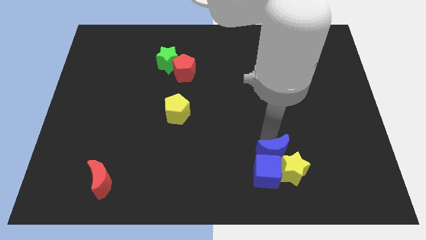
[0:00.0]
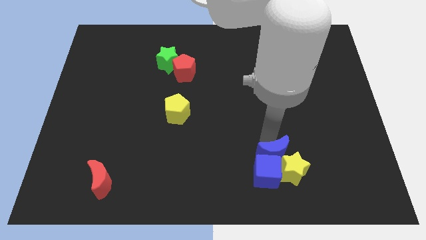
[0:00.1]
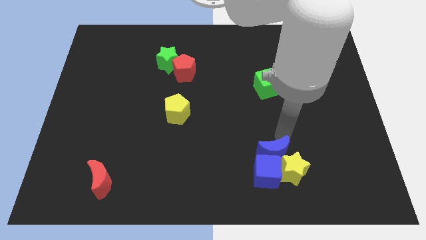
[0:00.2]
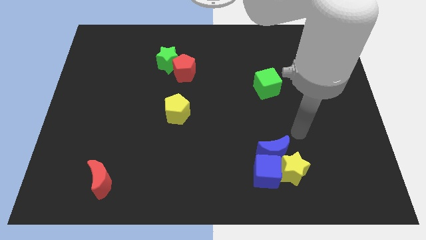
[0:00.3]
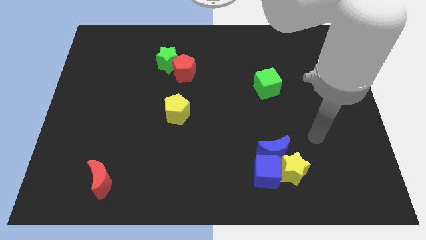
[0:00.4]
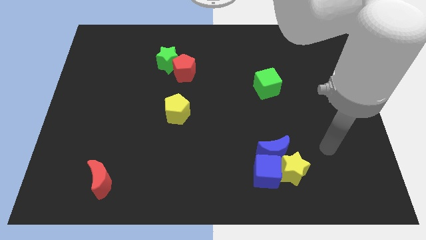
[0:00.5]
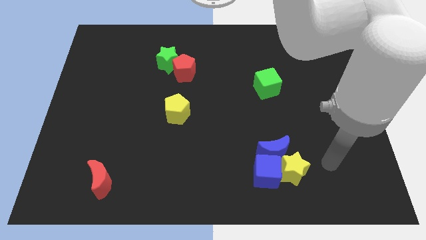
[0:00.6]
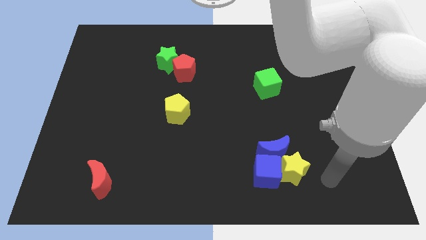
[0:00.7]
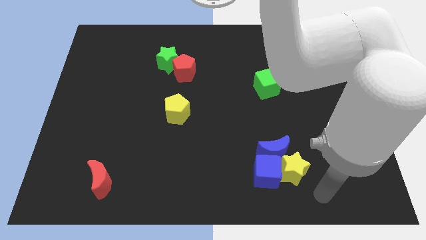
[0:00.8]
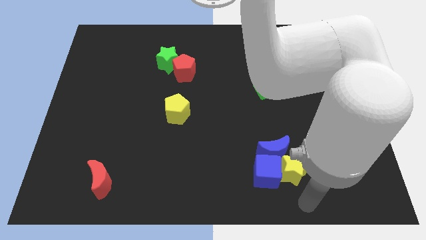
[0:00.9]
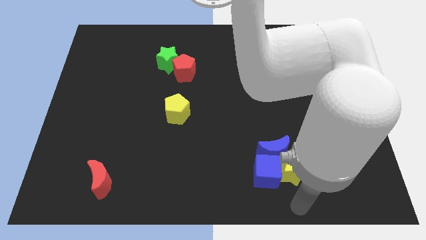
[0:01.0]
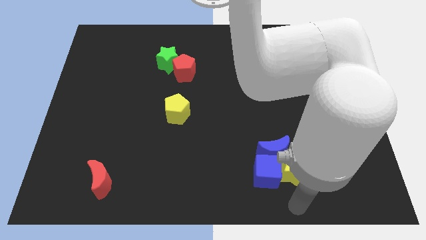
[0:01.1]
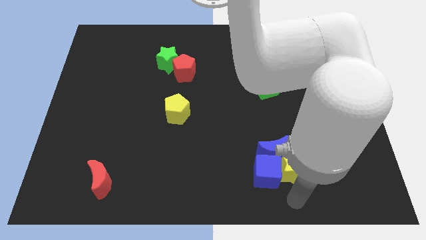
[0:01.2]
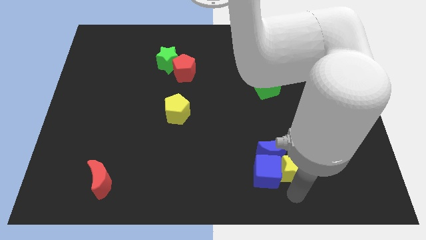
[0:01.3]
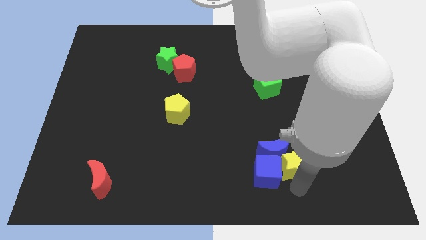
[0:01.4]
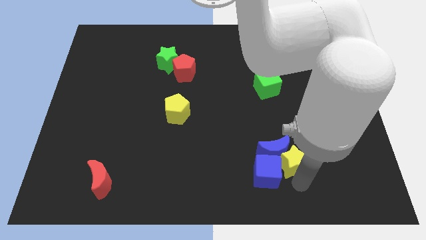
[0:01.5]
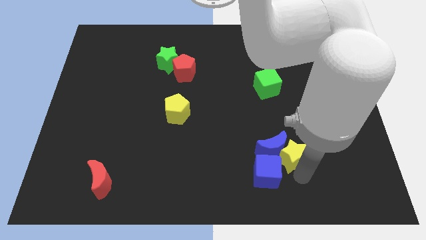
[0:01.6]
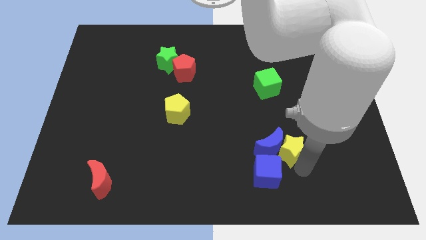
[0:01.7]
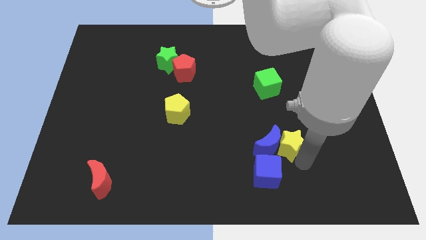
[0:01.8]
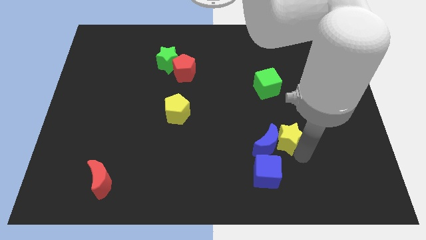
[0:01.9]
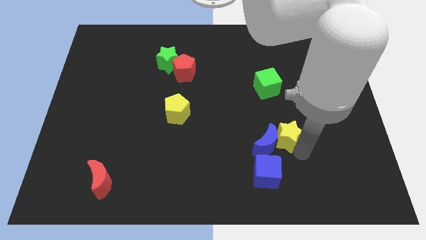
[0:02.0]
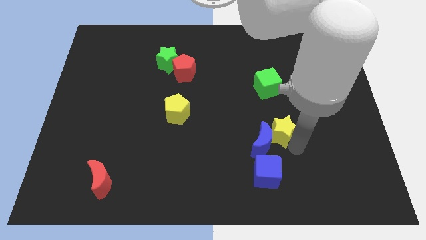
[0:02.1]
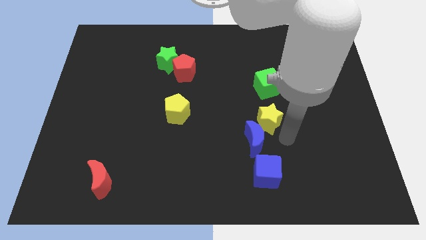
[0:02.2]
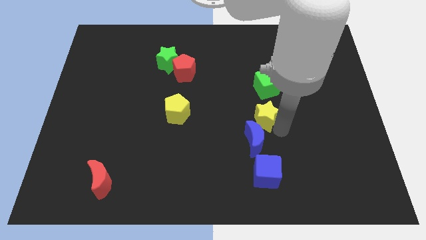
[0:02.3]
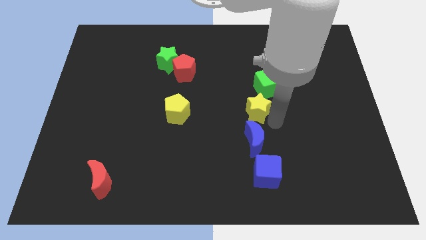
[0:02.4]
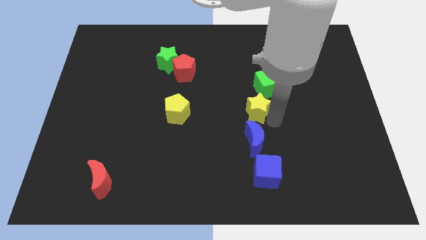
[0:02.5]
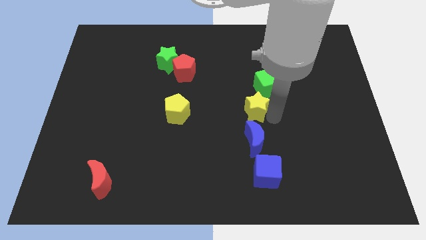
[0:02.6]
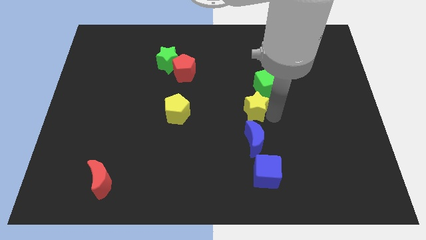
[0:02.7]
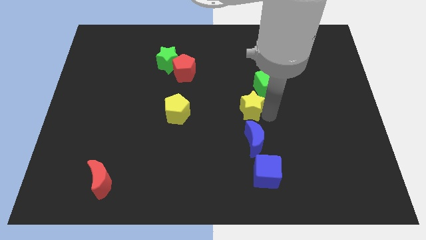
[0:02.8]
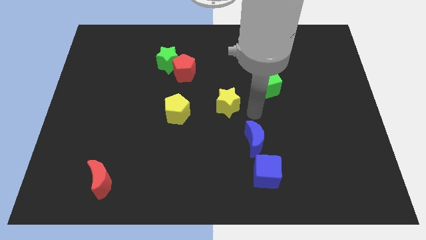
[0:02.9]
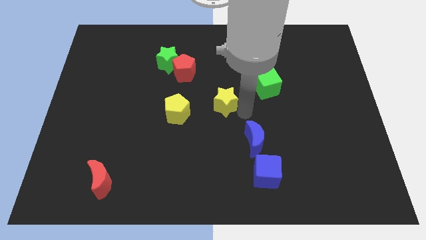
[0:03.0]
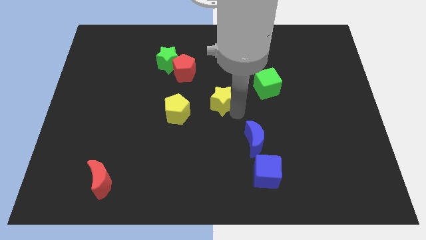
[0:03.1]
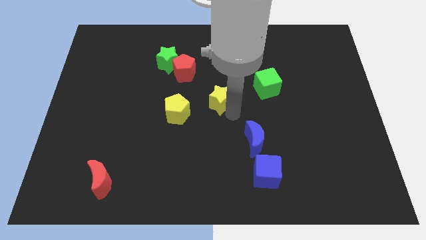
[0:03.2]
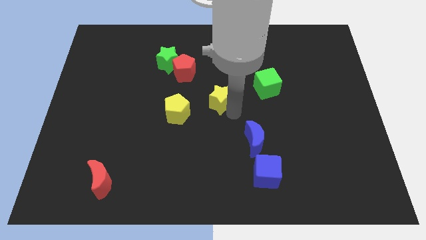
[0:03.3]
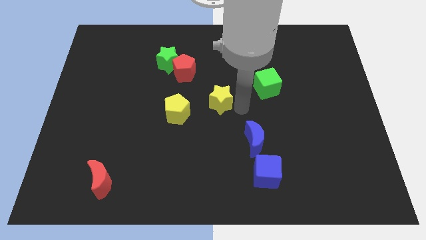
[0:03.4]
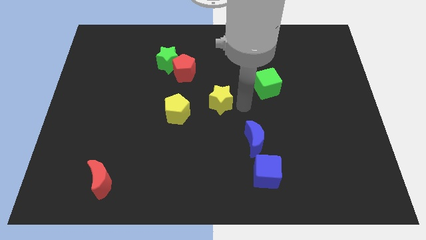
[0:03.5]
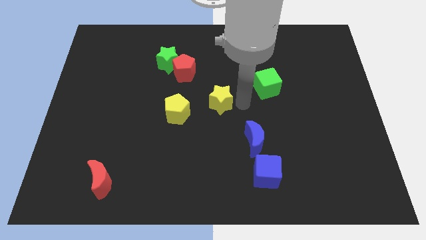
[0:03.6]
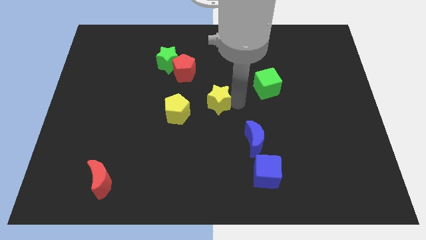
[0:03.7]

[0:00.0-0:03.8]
place the yellow star to the center of the board

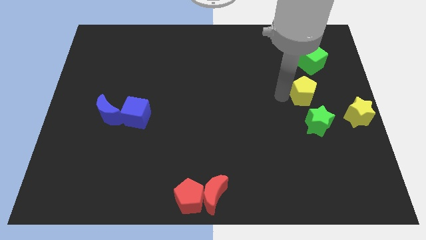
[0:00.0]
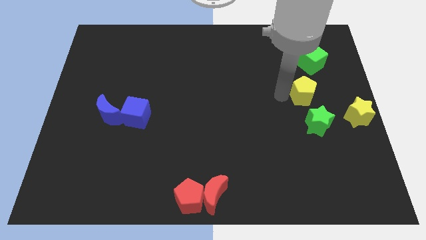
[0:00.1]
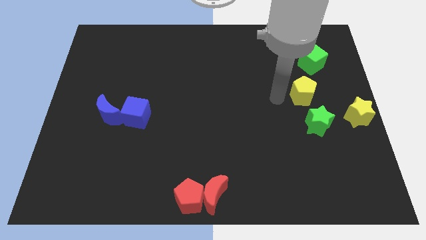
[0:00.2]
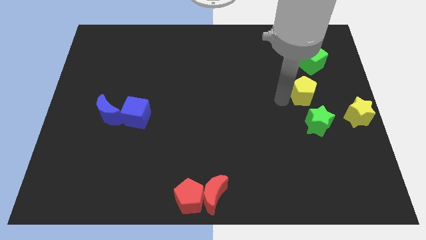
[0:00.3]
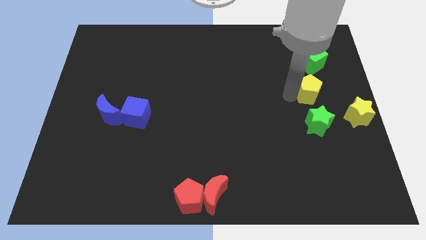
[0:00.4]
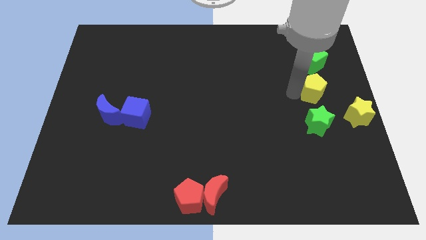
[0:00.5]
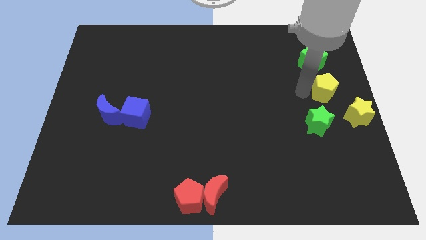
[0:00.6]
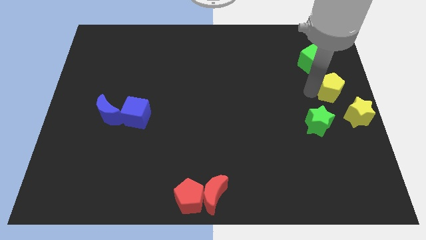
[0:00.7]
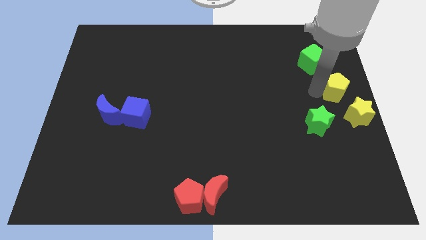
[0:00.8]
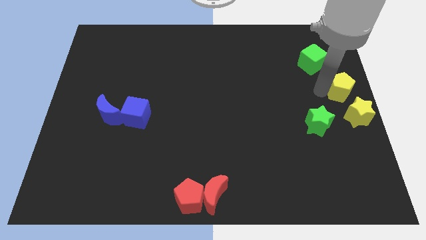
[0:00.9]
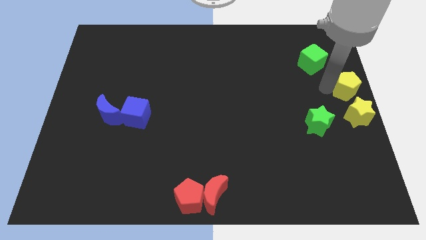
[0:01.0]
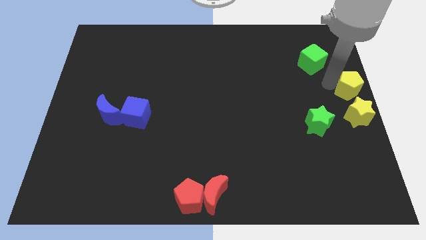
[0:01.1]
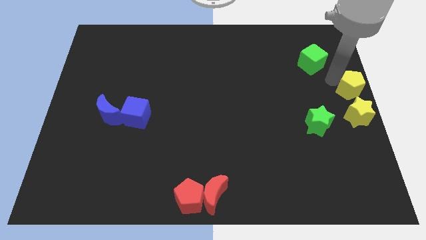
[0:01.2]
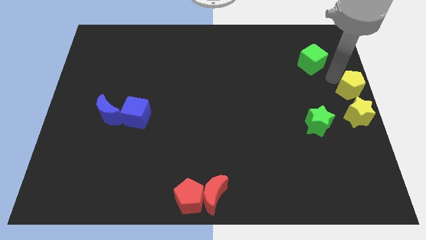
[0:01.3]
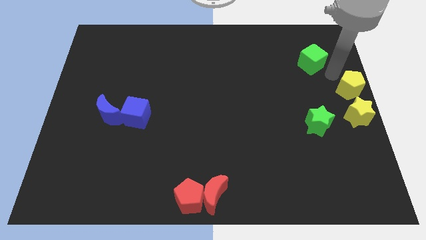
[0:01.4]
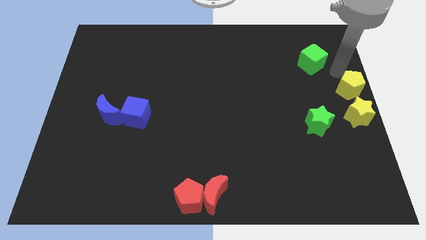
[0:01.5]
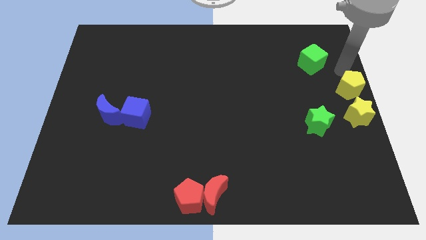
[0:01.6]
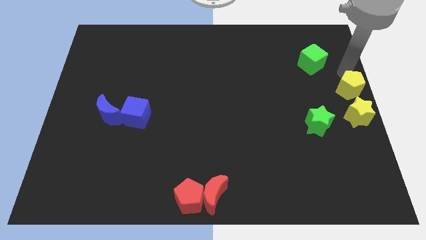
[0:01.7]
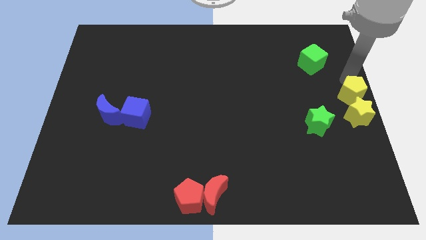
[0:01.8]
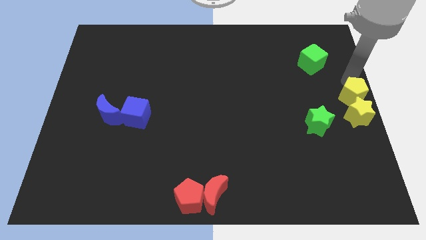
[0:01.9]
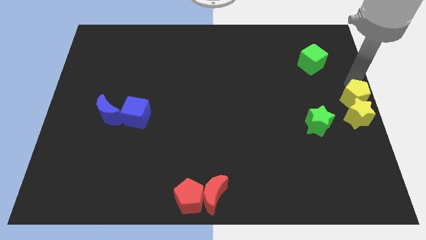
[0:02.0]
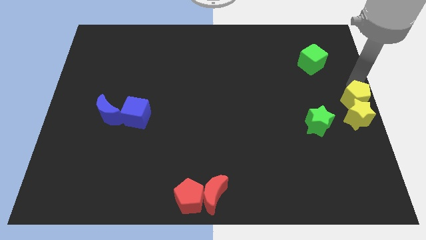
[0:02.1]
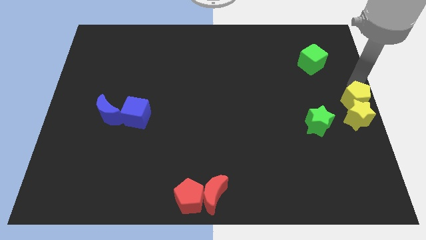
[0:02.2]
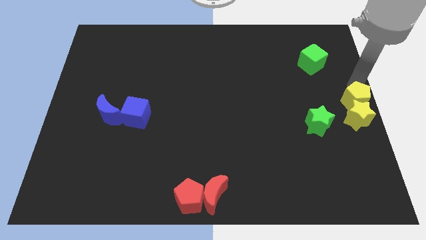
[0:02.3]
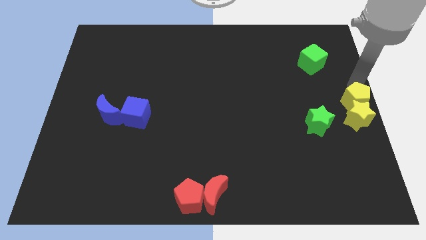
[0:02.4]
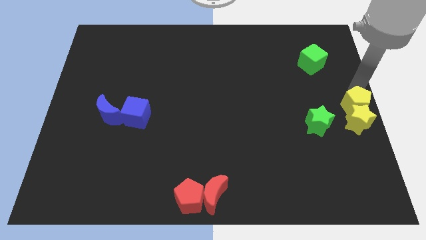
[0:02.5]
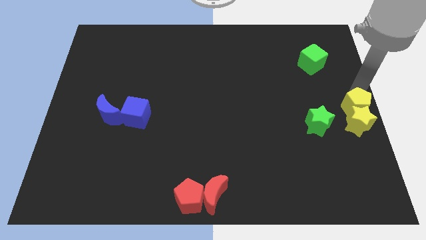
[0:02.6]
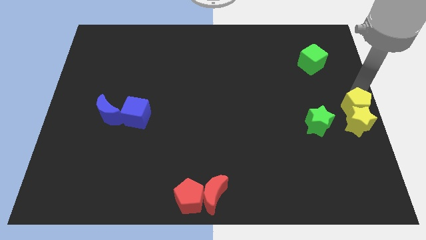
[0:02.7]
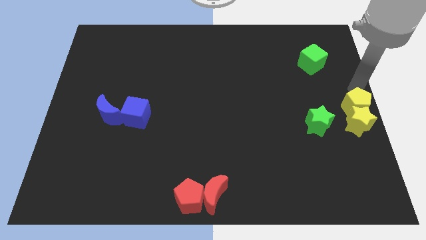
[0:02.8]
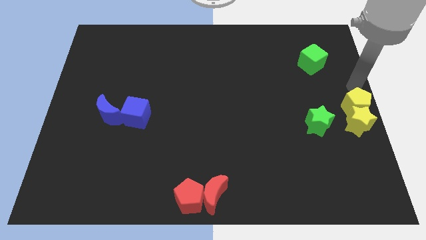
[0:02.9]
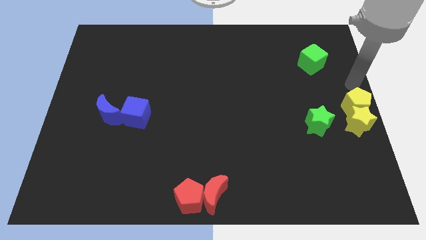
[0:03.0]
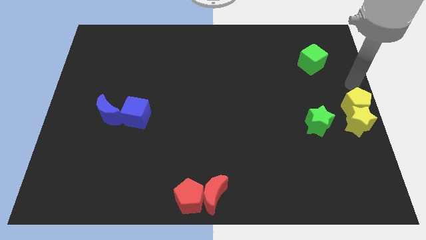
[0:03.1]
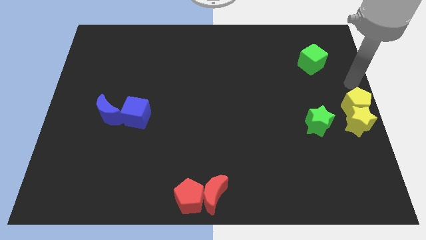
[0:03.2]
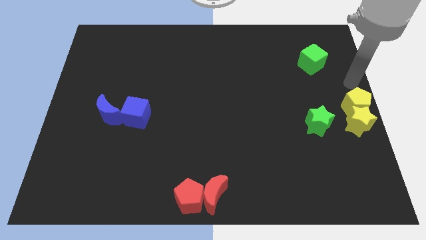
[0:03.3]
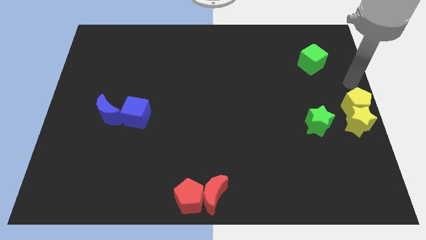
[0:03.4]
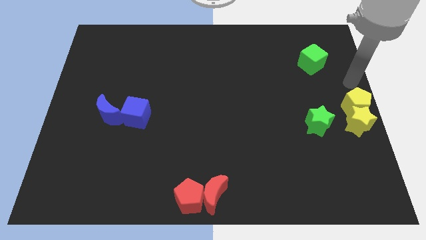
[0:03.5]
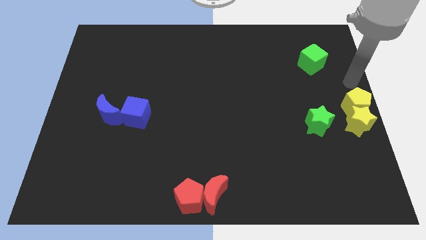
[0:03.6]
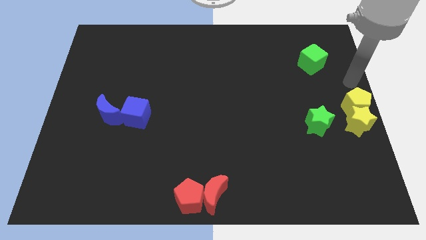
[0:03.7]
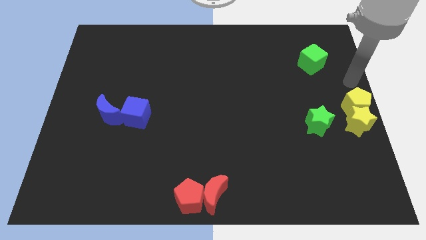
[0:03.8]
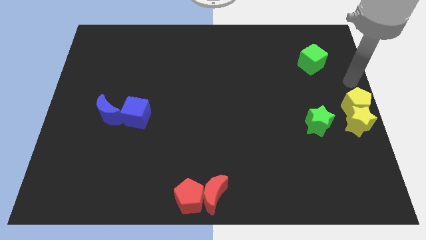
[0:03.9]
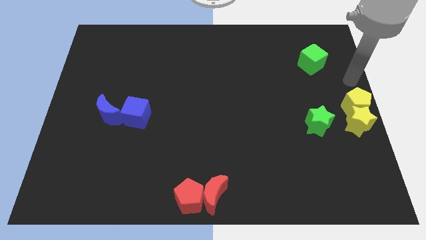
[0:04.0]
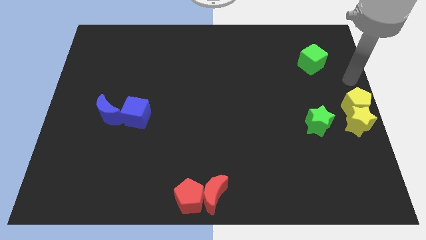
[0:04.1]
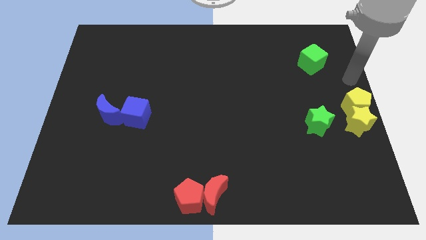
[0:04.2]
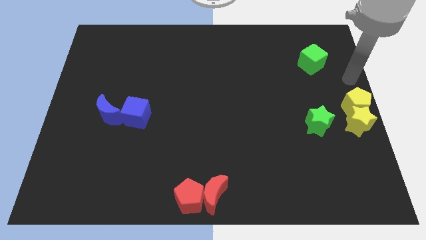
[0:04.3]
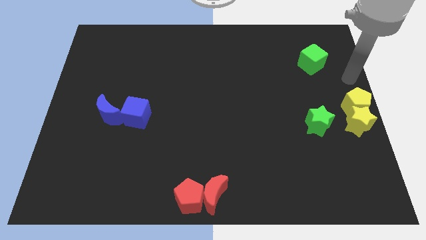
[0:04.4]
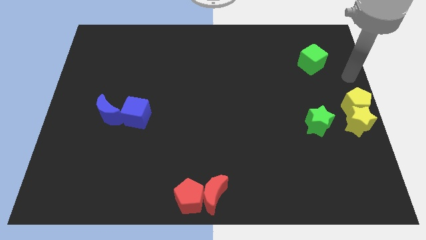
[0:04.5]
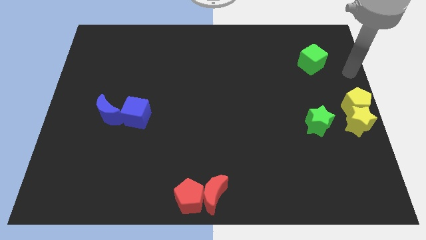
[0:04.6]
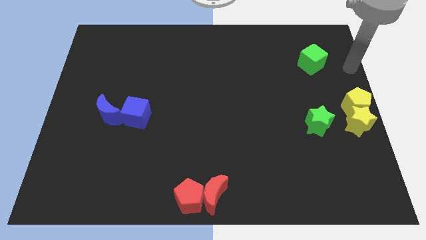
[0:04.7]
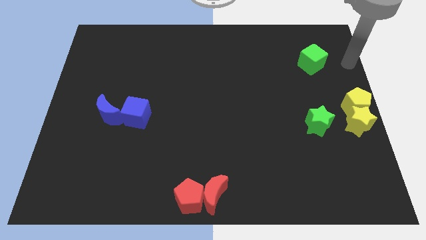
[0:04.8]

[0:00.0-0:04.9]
push the yellow pentagon into the yellow star

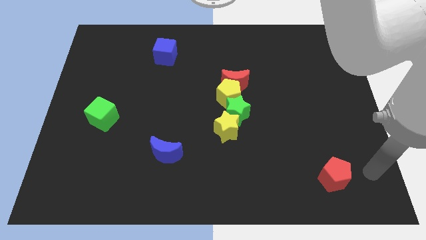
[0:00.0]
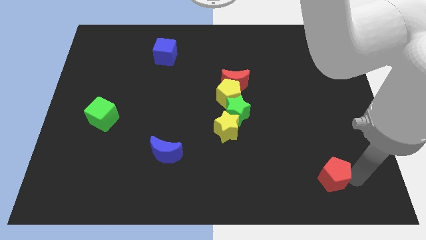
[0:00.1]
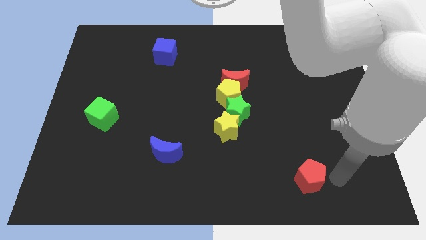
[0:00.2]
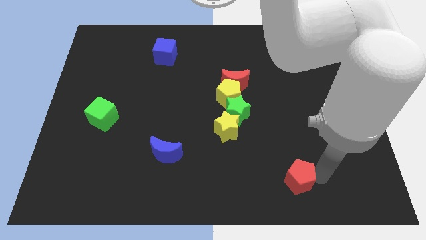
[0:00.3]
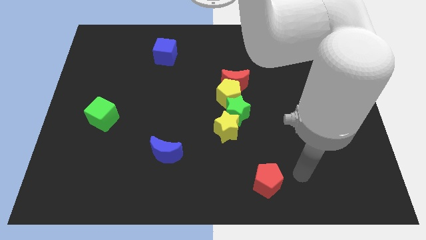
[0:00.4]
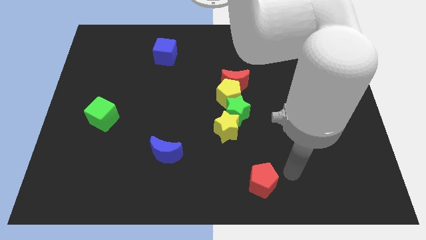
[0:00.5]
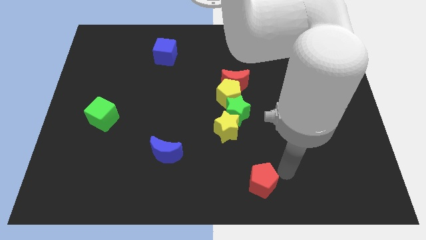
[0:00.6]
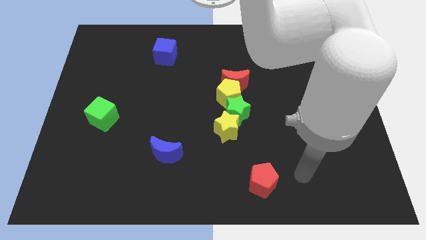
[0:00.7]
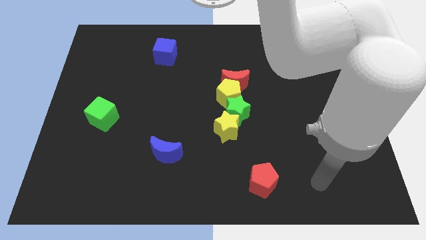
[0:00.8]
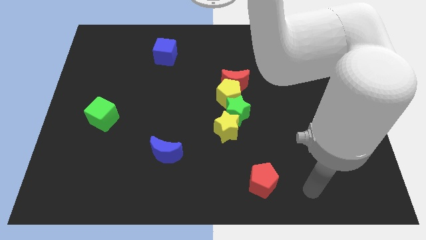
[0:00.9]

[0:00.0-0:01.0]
push the red pentagon towards the left side of the board
